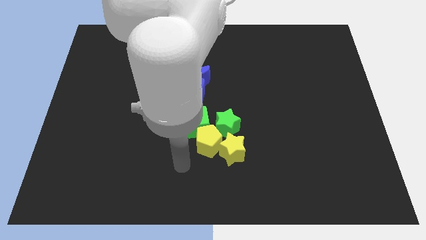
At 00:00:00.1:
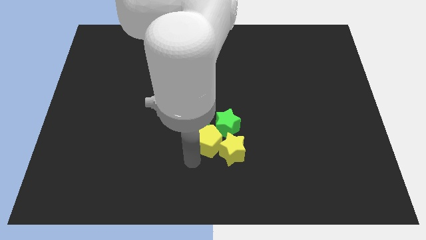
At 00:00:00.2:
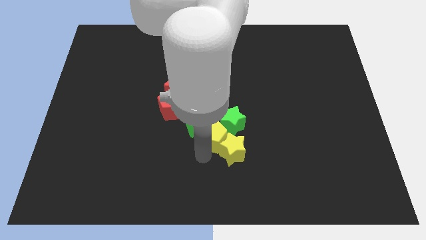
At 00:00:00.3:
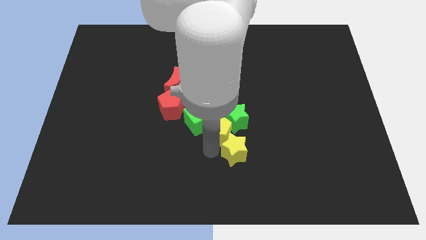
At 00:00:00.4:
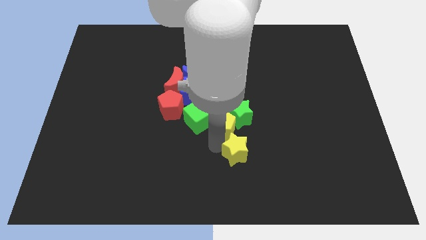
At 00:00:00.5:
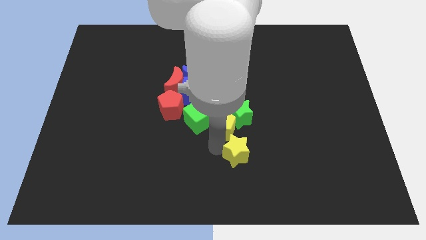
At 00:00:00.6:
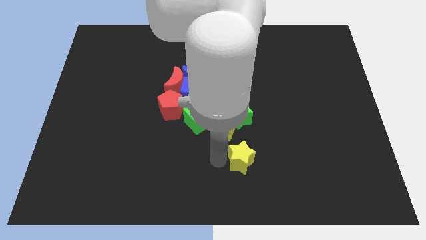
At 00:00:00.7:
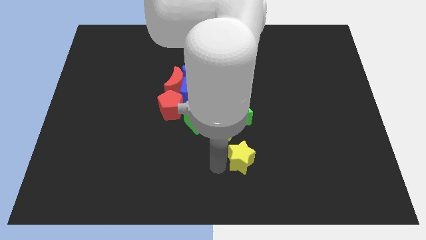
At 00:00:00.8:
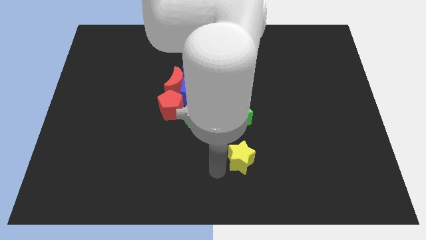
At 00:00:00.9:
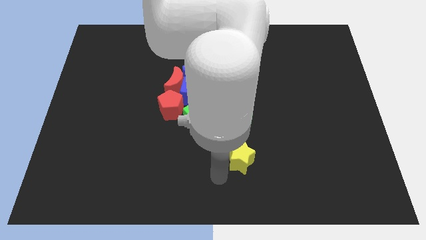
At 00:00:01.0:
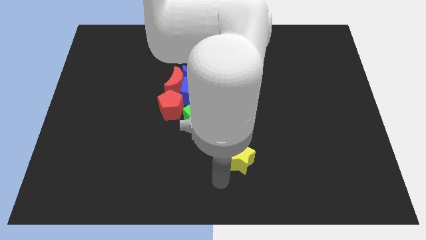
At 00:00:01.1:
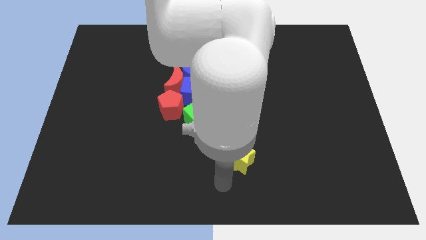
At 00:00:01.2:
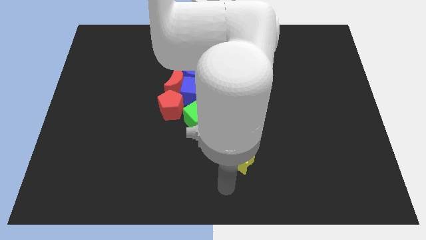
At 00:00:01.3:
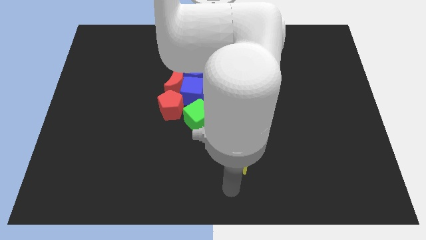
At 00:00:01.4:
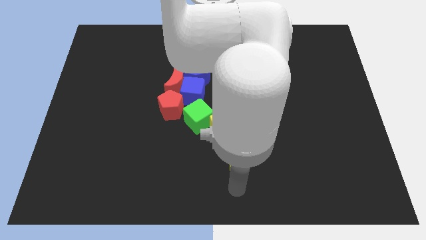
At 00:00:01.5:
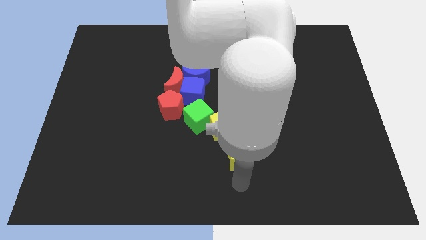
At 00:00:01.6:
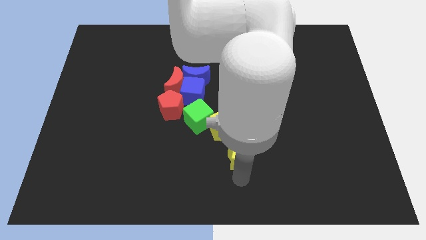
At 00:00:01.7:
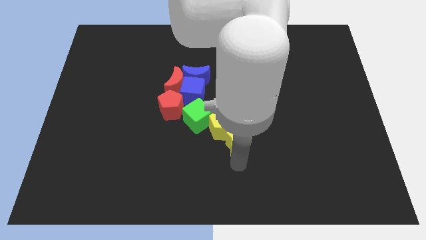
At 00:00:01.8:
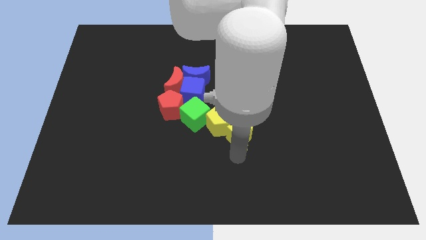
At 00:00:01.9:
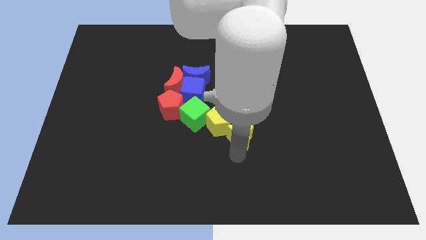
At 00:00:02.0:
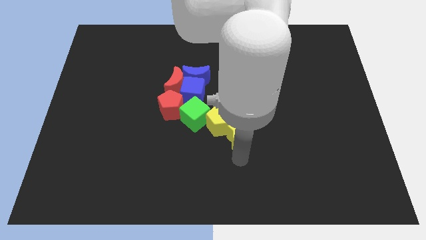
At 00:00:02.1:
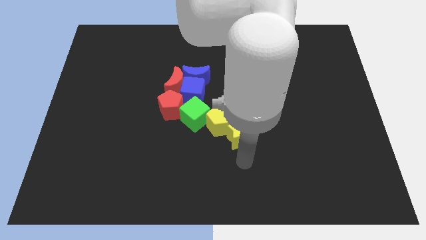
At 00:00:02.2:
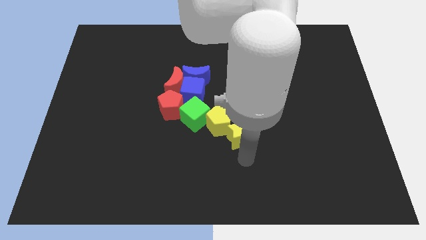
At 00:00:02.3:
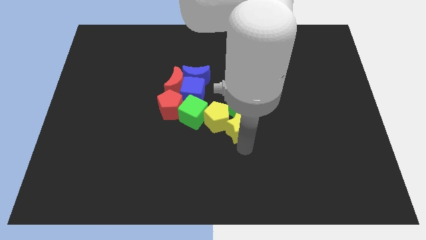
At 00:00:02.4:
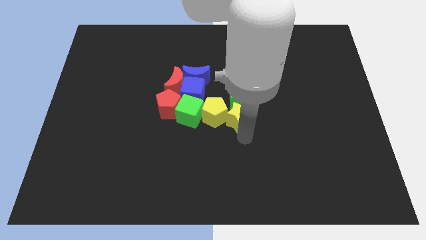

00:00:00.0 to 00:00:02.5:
push the yellow star into the green star

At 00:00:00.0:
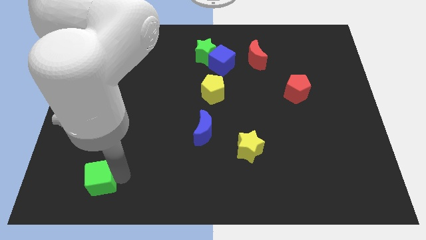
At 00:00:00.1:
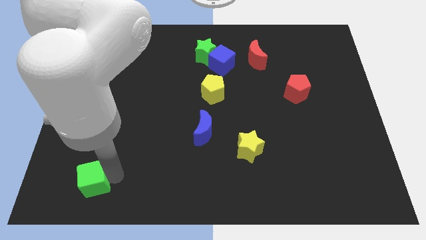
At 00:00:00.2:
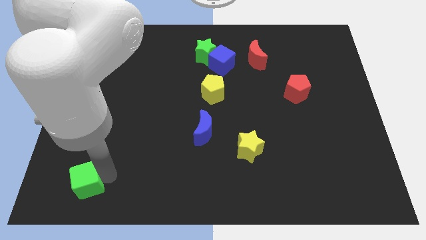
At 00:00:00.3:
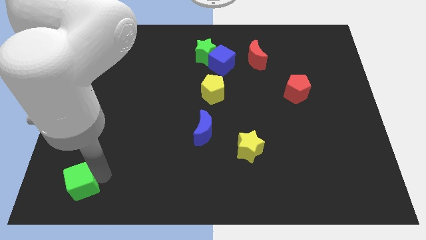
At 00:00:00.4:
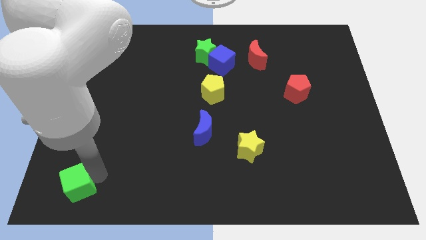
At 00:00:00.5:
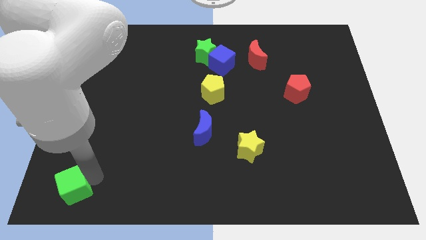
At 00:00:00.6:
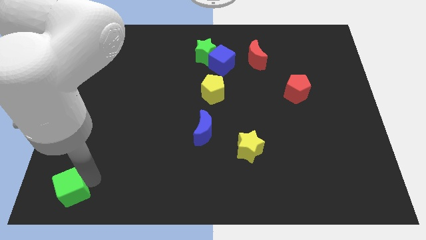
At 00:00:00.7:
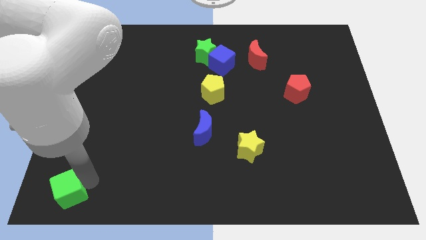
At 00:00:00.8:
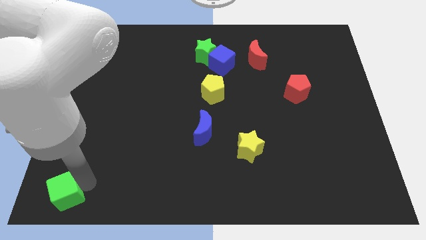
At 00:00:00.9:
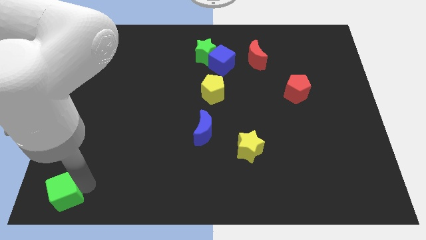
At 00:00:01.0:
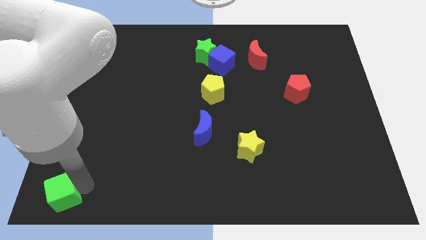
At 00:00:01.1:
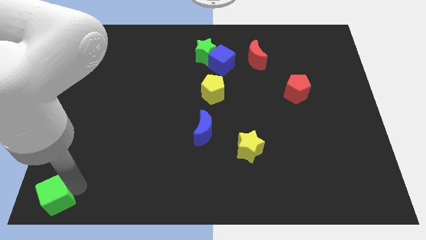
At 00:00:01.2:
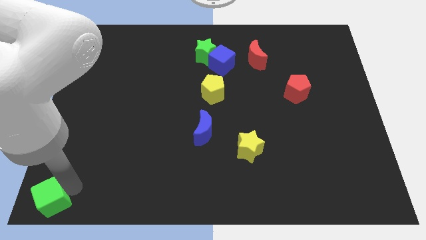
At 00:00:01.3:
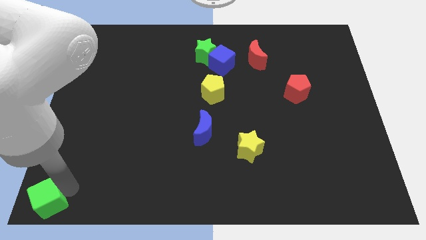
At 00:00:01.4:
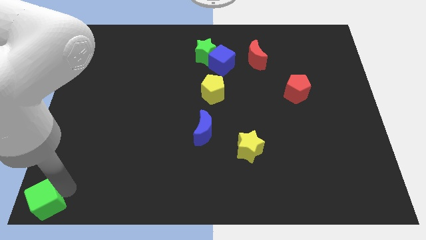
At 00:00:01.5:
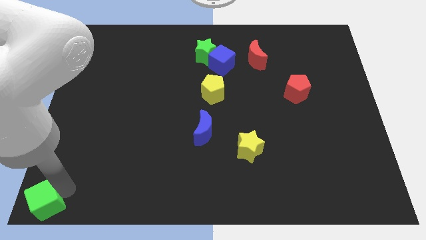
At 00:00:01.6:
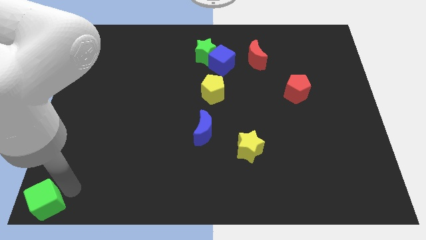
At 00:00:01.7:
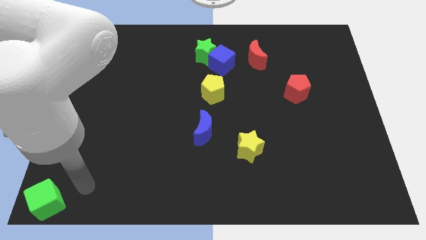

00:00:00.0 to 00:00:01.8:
push the green cube to the bottom left corner of the board

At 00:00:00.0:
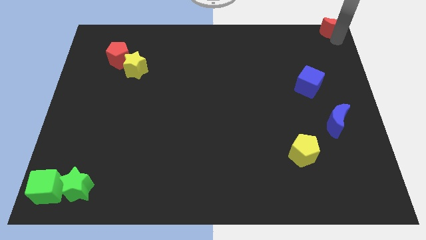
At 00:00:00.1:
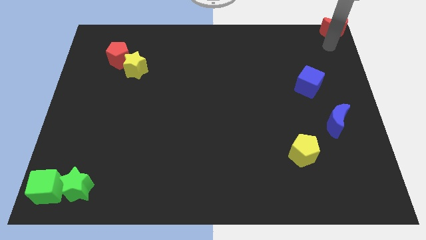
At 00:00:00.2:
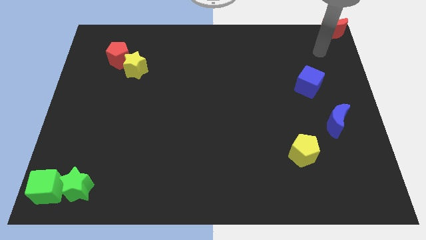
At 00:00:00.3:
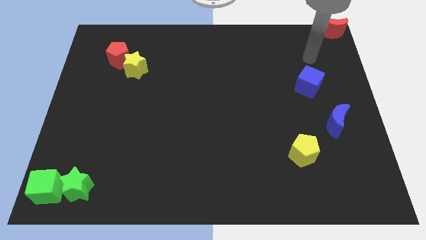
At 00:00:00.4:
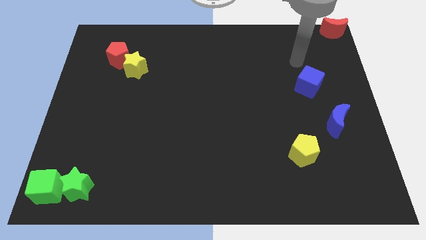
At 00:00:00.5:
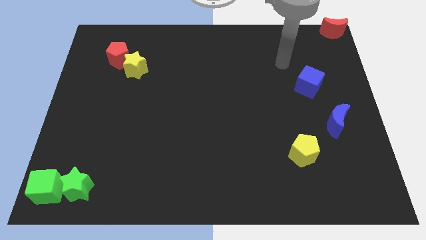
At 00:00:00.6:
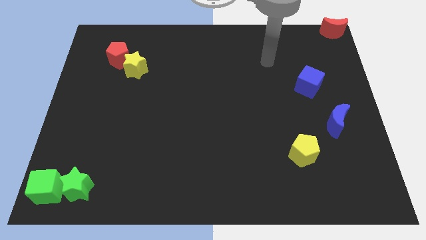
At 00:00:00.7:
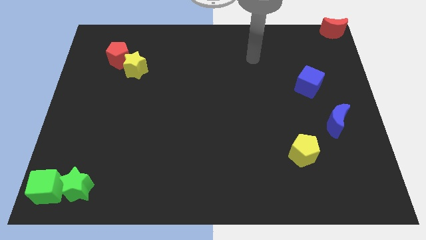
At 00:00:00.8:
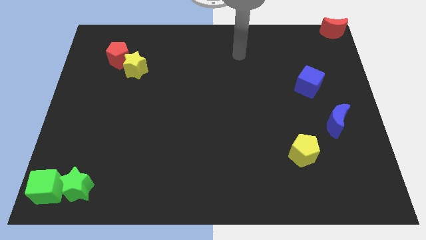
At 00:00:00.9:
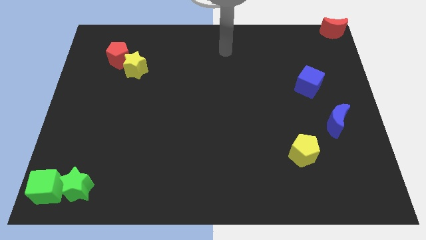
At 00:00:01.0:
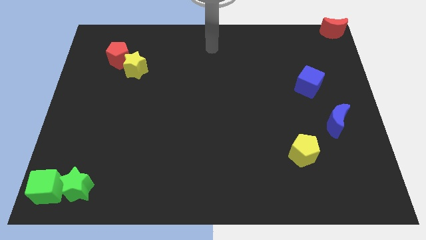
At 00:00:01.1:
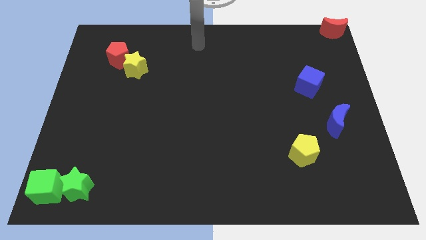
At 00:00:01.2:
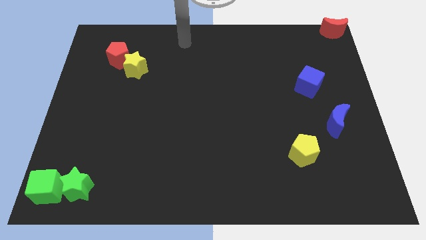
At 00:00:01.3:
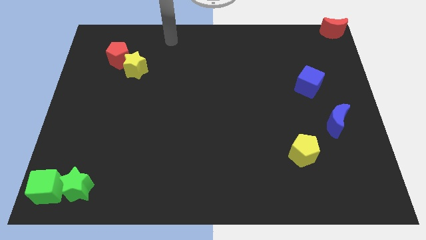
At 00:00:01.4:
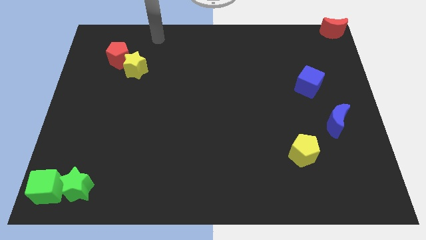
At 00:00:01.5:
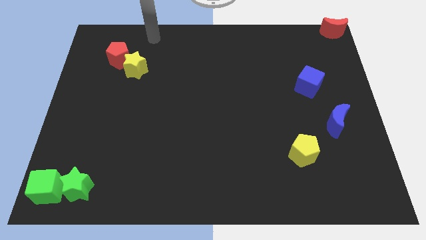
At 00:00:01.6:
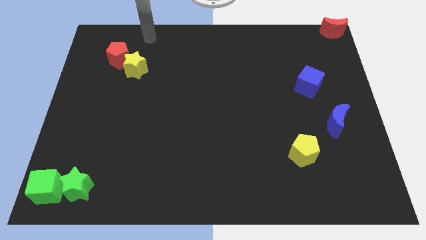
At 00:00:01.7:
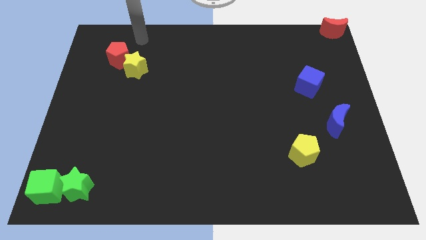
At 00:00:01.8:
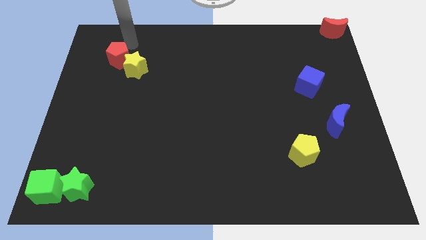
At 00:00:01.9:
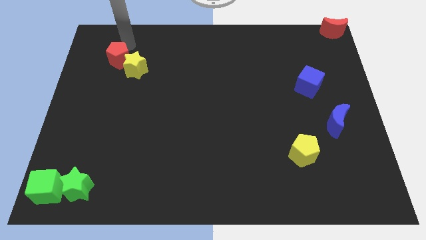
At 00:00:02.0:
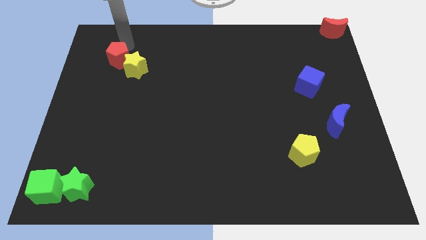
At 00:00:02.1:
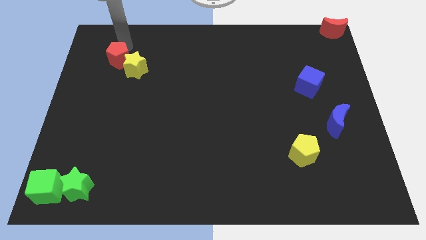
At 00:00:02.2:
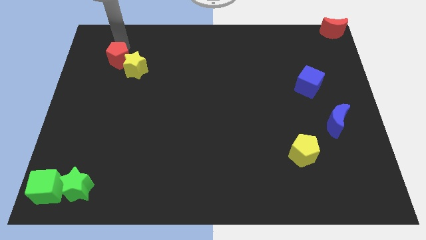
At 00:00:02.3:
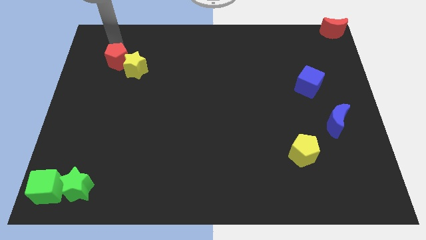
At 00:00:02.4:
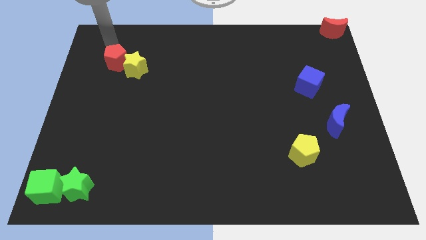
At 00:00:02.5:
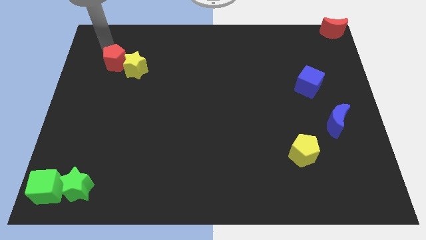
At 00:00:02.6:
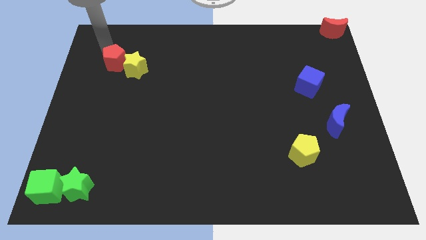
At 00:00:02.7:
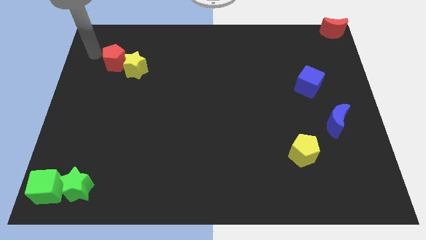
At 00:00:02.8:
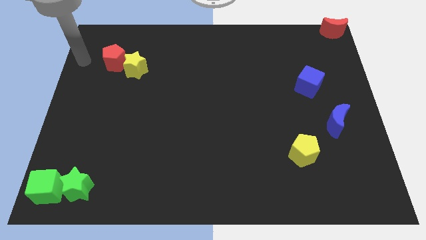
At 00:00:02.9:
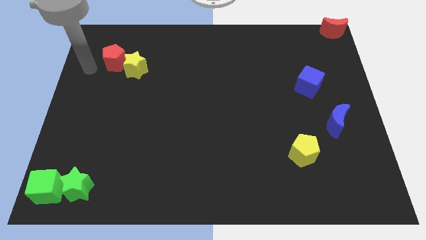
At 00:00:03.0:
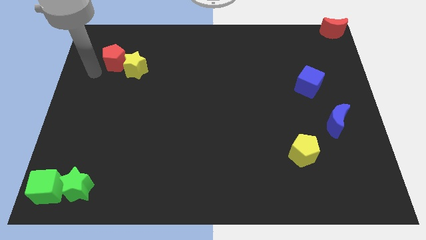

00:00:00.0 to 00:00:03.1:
move your arm to the left of red pentagon

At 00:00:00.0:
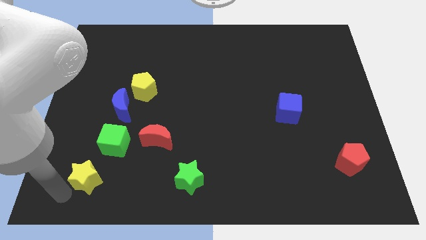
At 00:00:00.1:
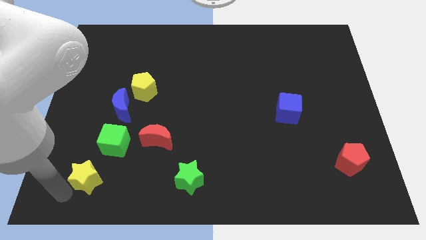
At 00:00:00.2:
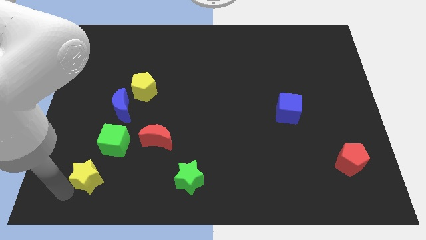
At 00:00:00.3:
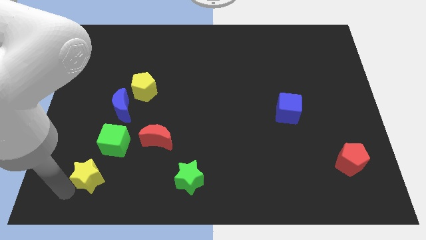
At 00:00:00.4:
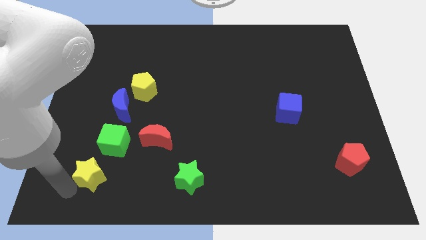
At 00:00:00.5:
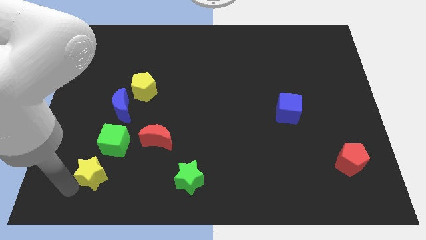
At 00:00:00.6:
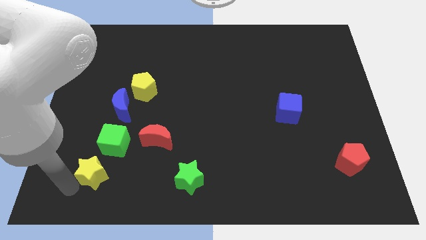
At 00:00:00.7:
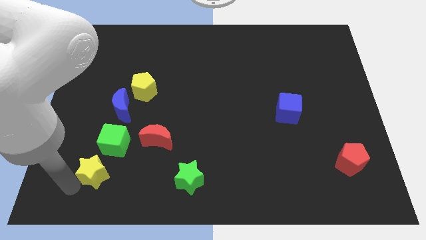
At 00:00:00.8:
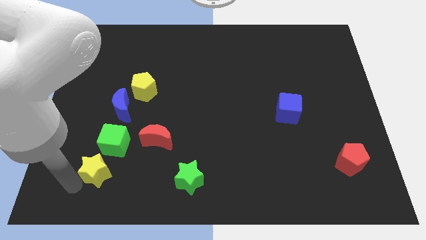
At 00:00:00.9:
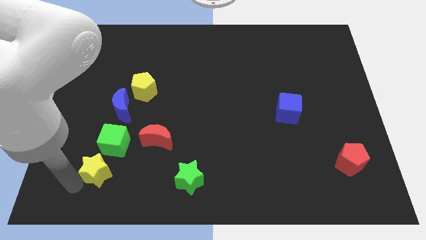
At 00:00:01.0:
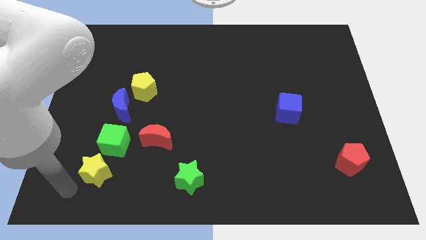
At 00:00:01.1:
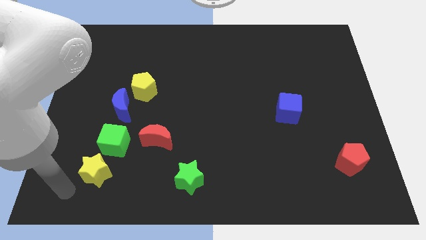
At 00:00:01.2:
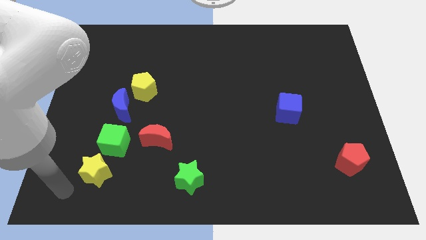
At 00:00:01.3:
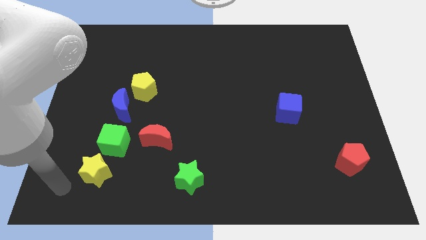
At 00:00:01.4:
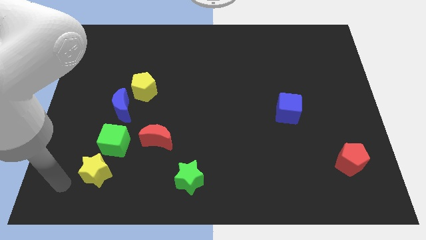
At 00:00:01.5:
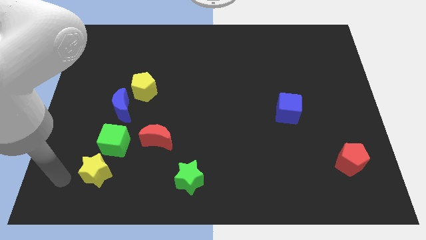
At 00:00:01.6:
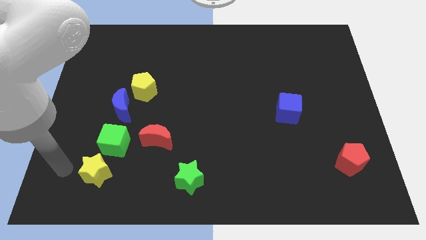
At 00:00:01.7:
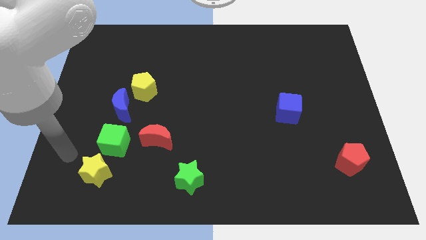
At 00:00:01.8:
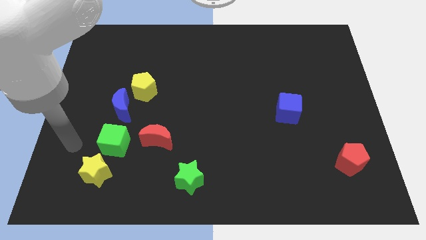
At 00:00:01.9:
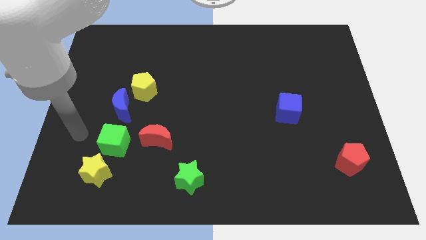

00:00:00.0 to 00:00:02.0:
place the yellow star below the green cube
